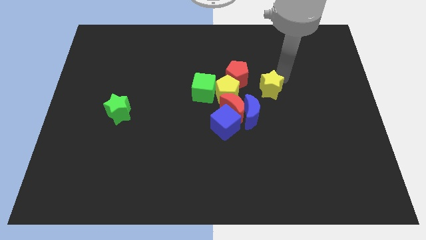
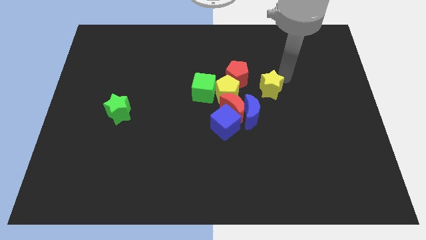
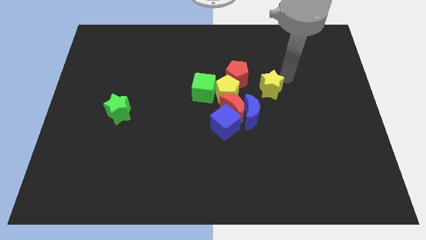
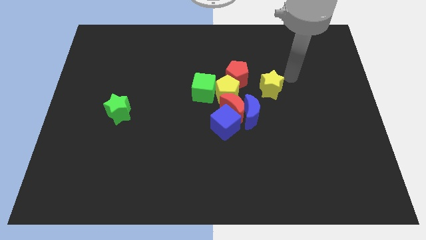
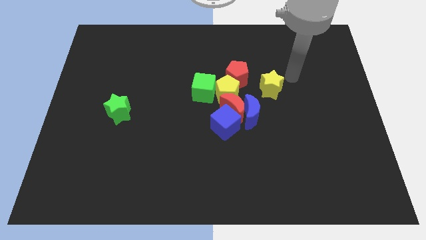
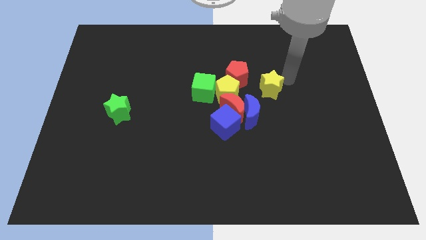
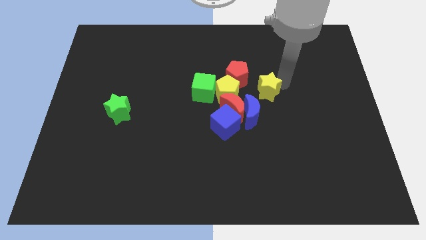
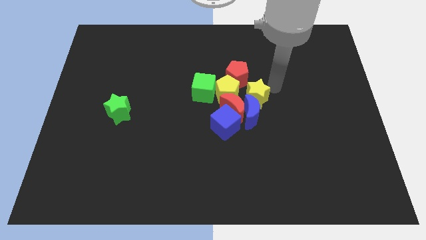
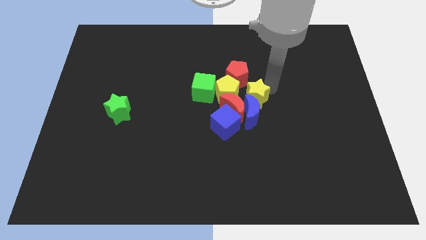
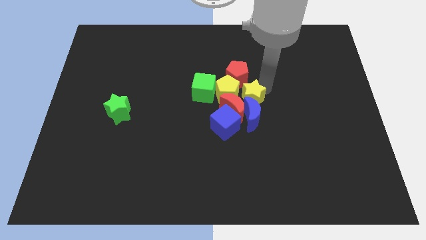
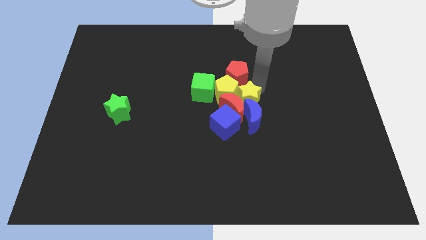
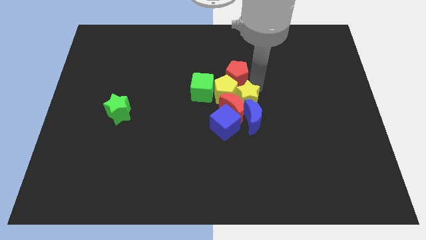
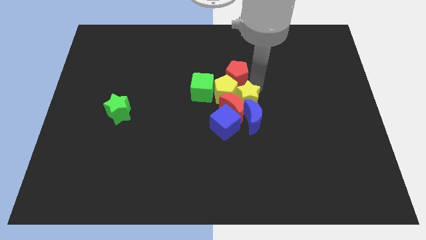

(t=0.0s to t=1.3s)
drag the yellow star into the top of the blue moon

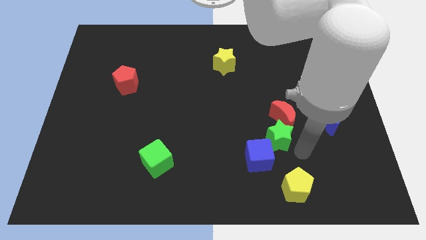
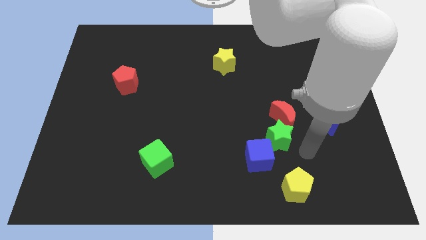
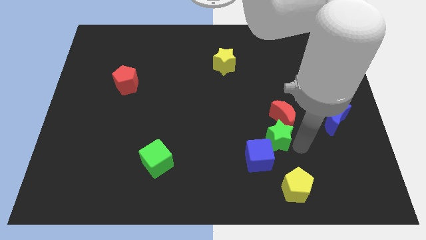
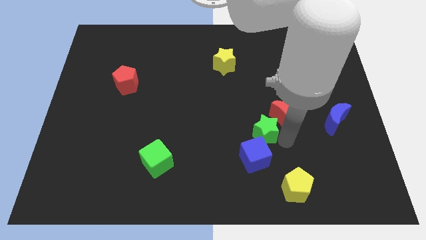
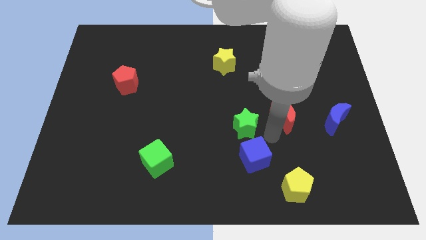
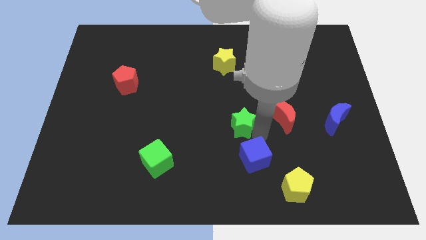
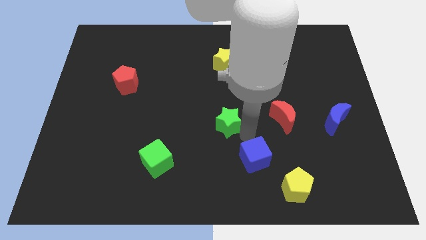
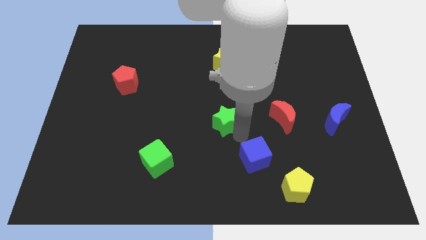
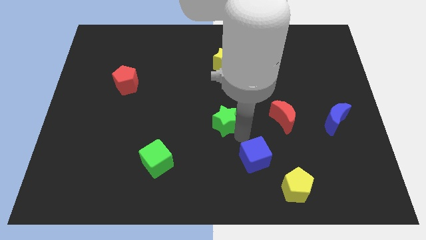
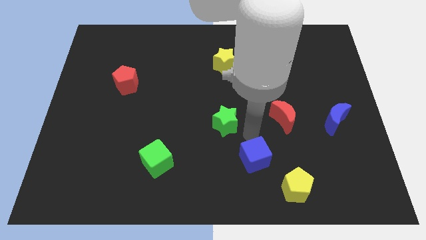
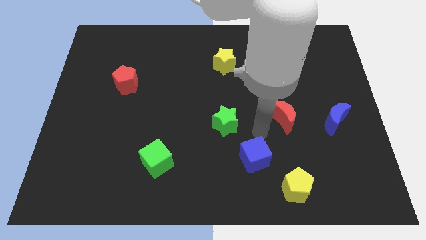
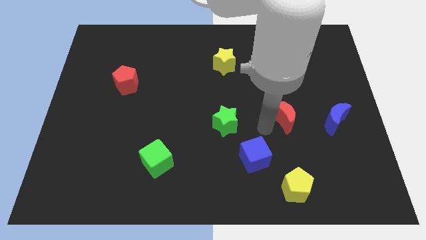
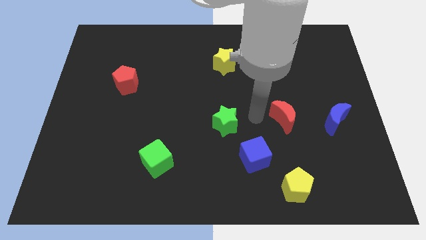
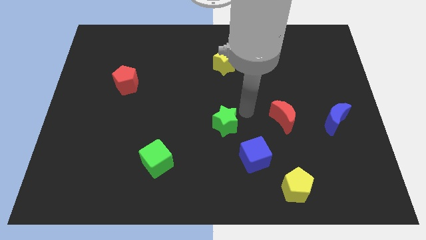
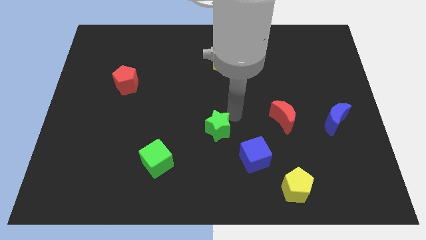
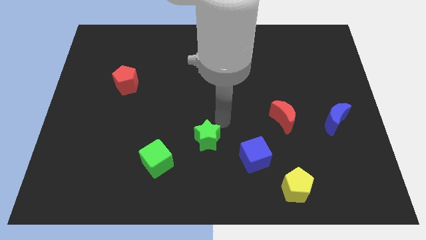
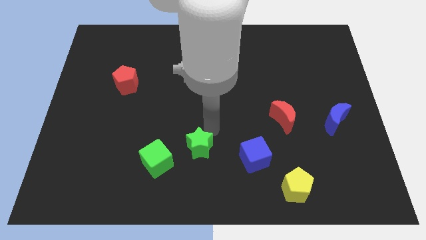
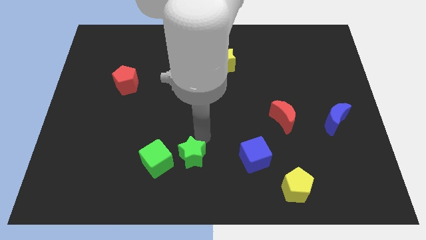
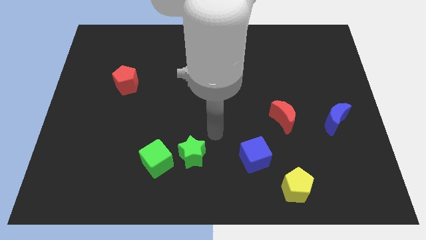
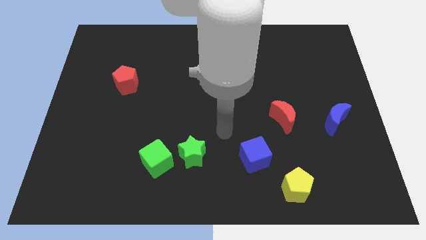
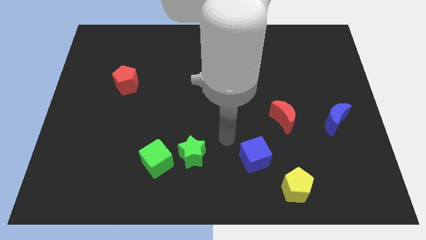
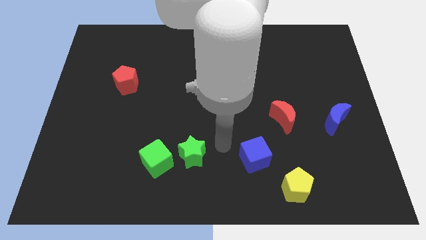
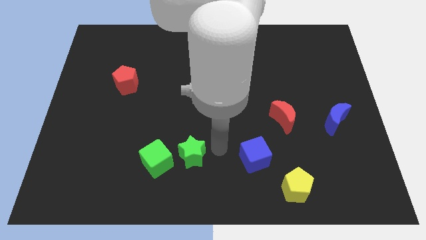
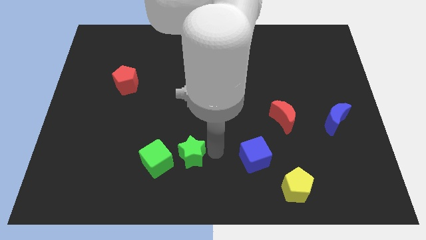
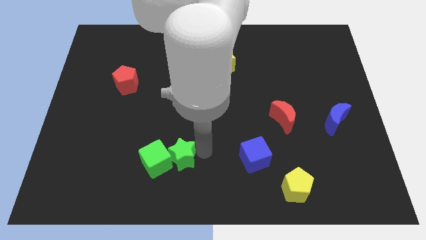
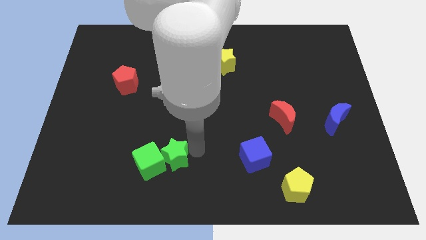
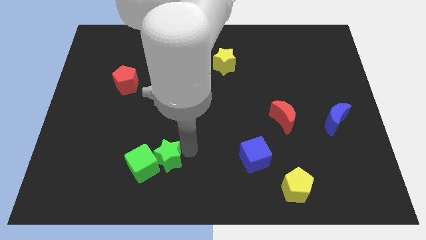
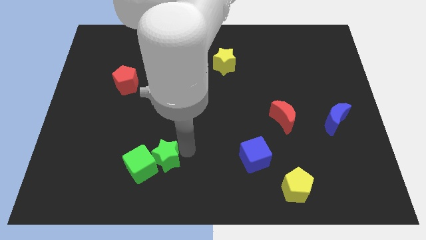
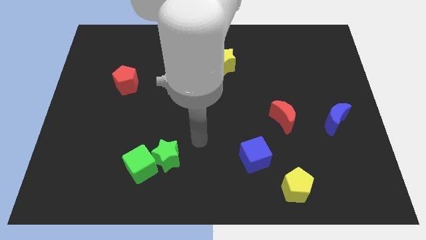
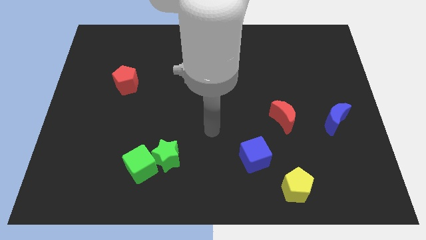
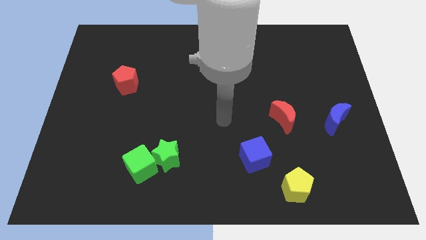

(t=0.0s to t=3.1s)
push green star into green cube

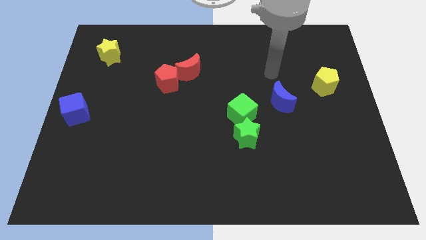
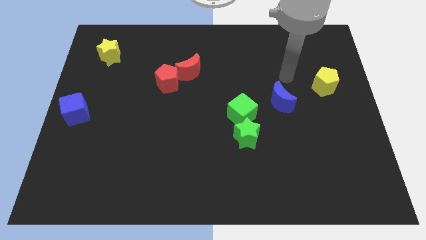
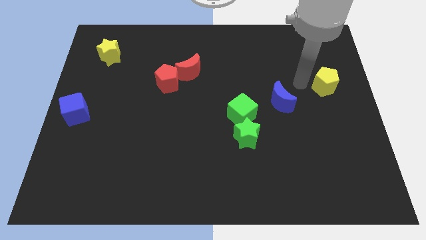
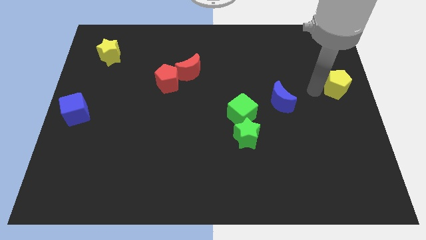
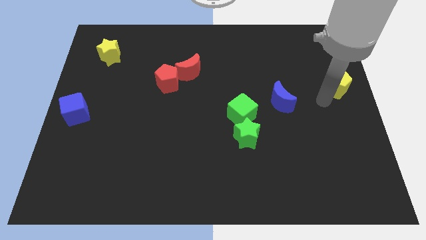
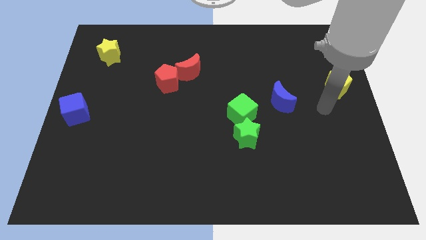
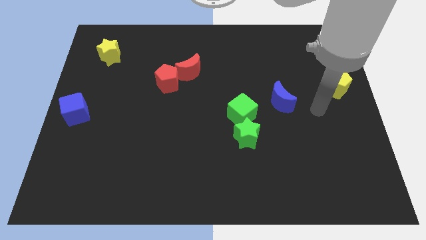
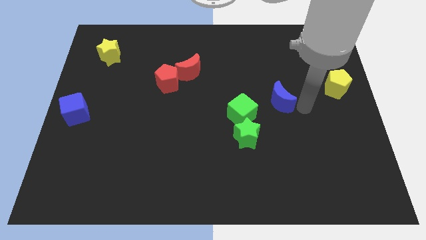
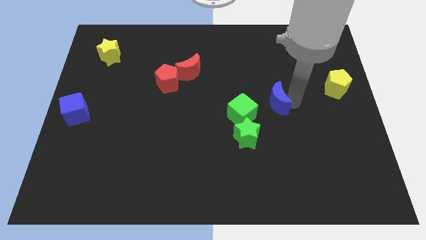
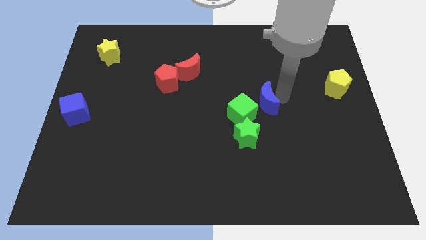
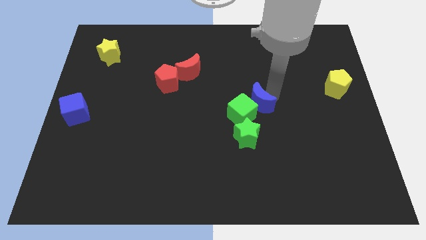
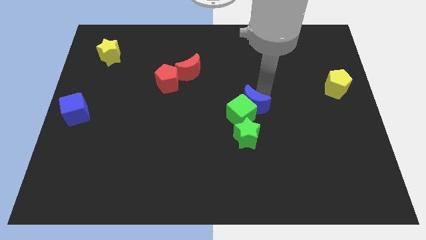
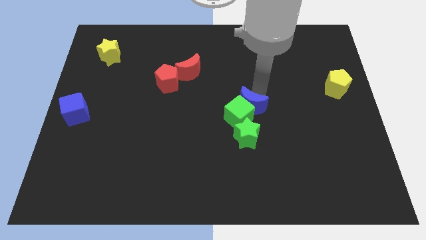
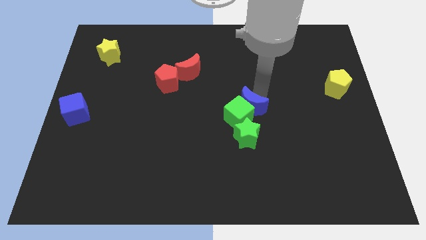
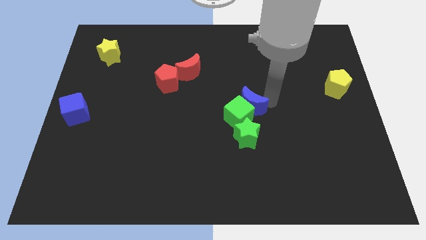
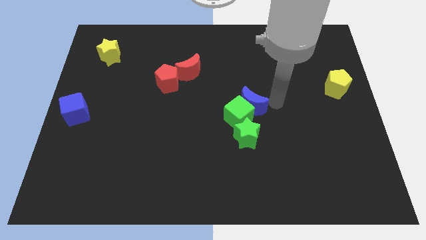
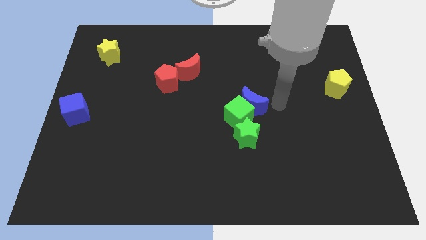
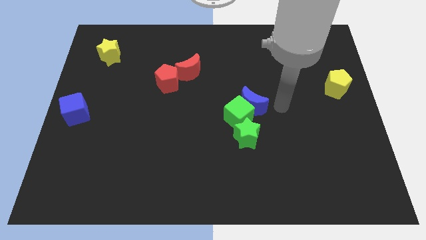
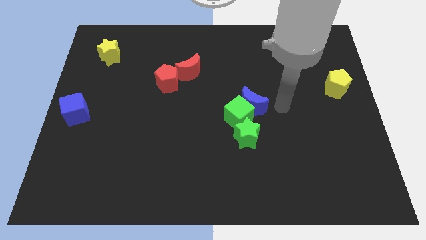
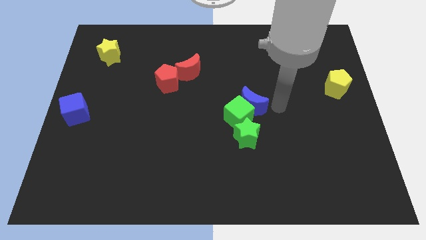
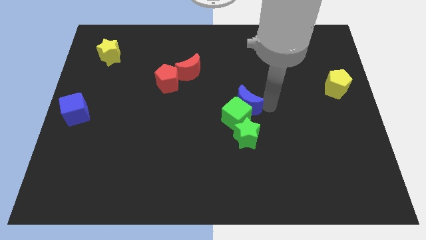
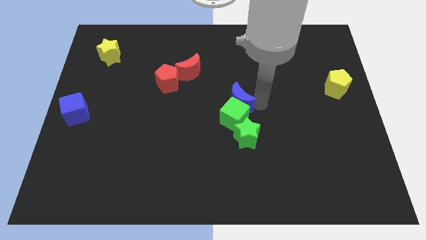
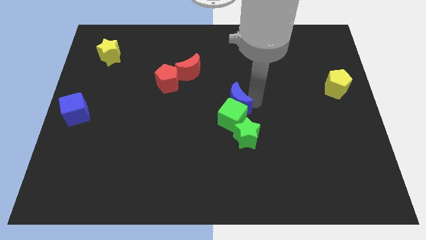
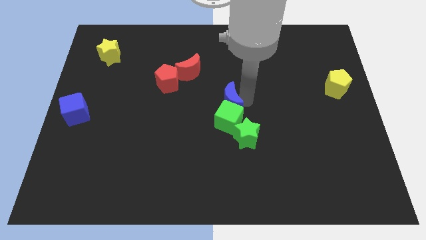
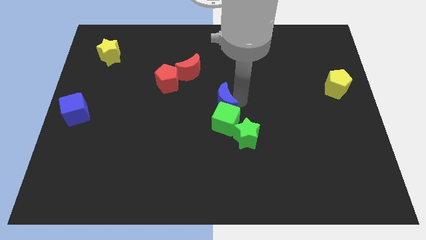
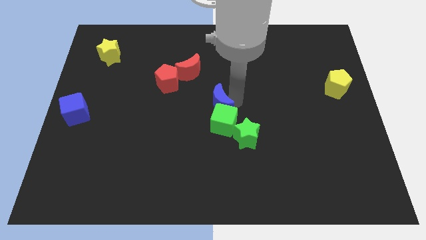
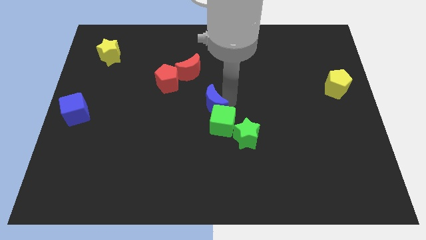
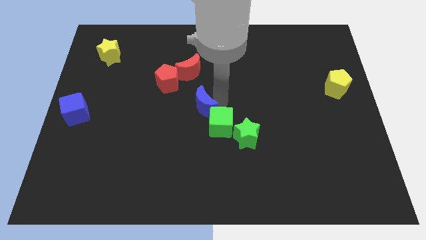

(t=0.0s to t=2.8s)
put the blue moon into the green cube

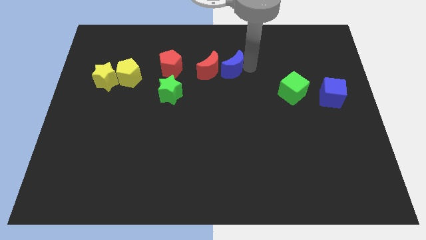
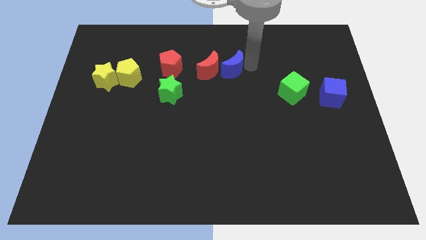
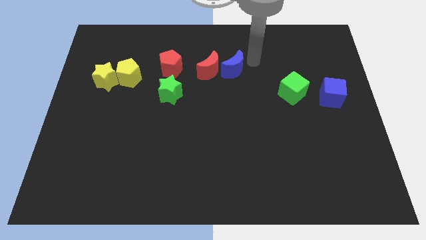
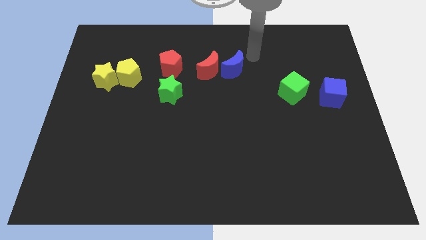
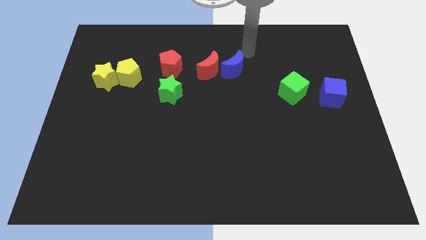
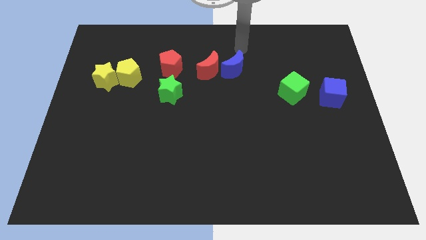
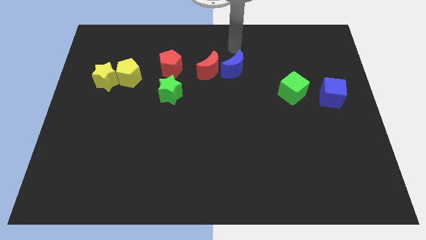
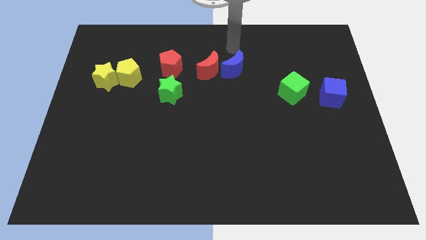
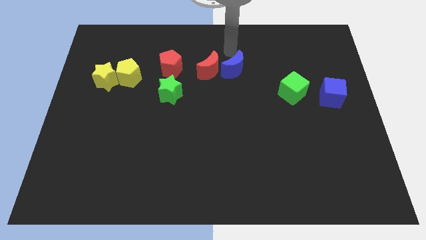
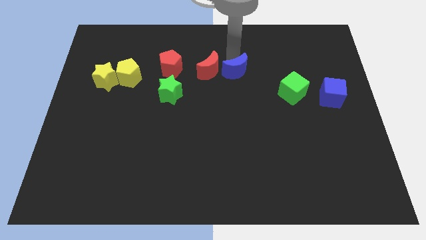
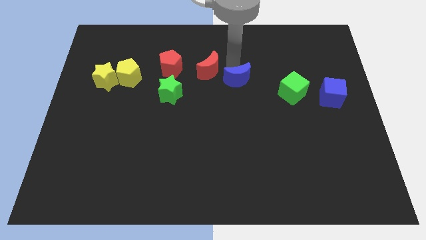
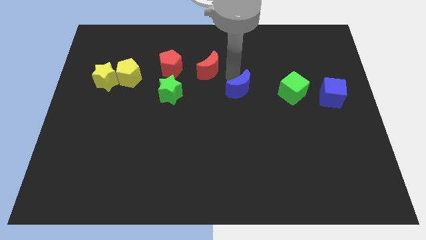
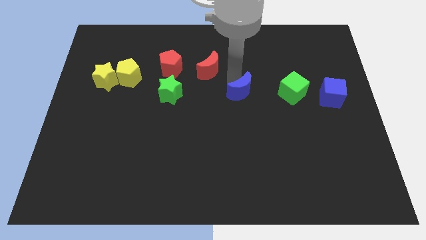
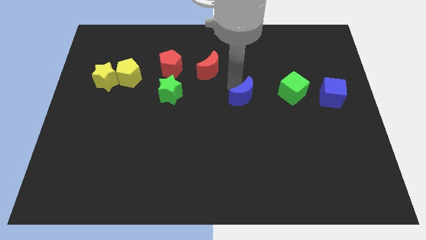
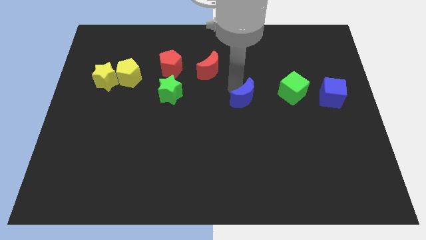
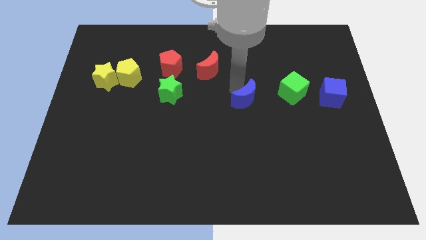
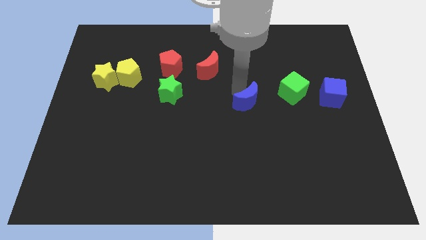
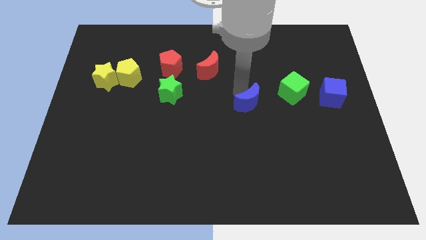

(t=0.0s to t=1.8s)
move the blue crescent to the right side of the green cube

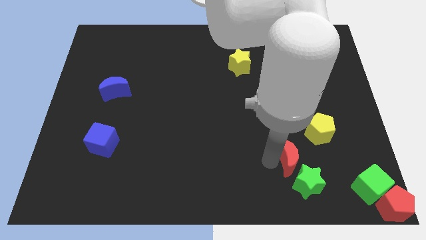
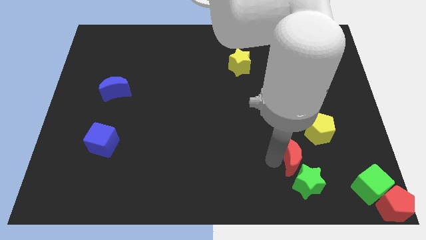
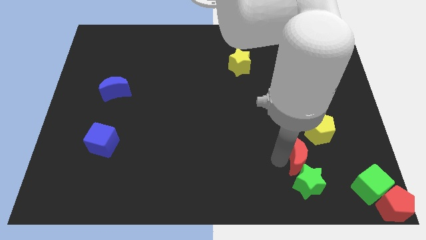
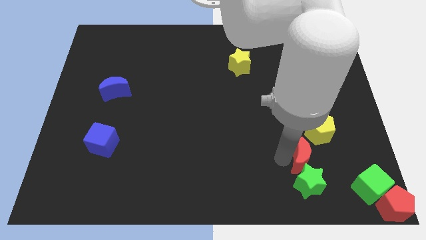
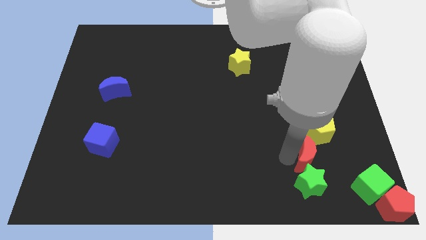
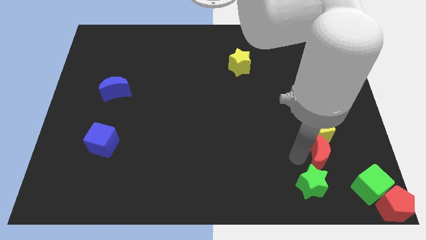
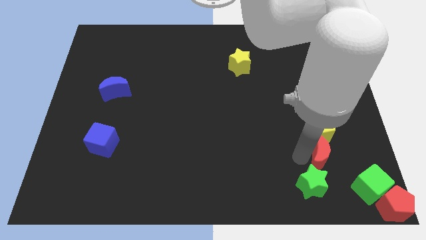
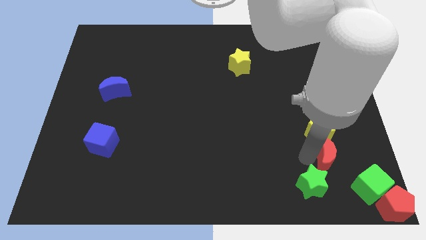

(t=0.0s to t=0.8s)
push the red crescent to the top of the green star
